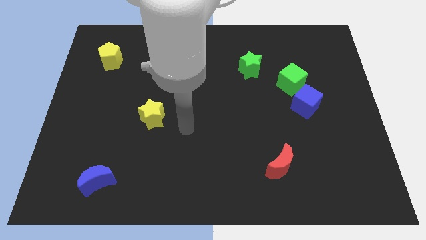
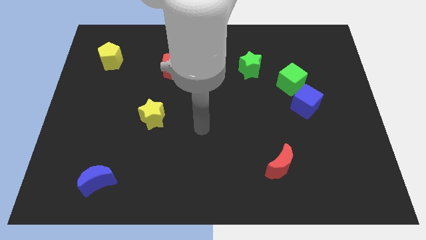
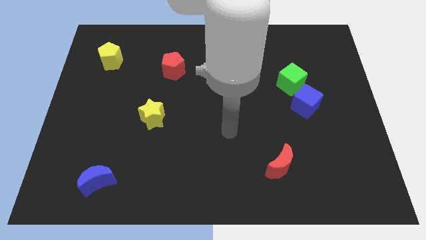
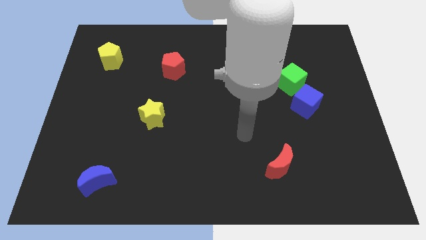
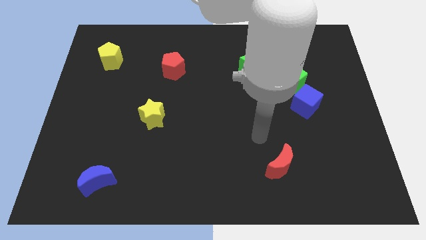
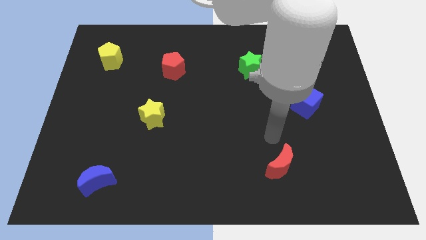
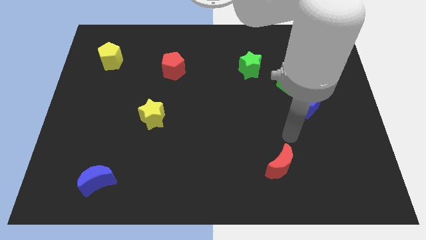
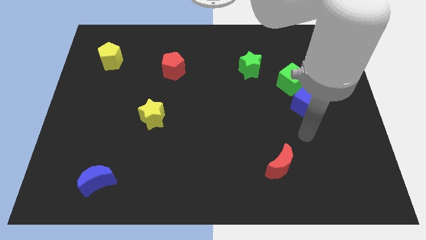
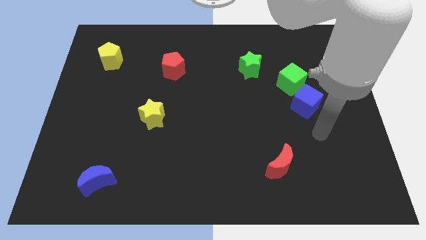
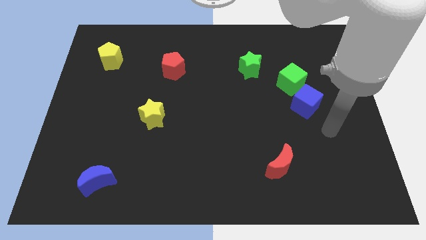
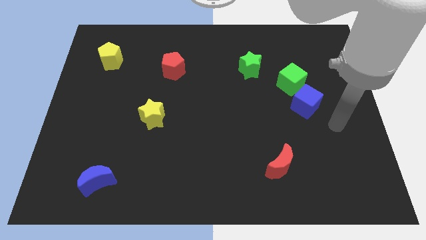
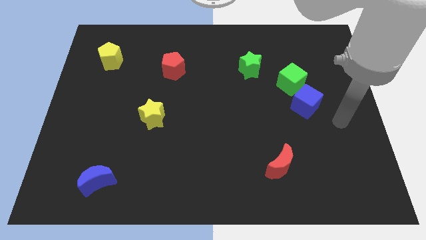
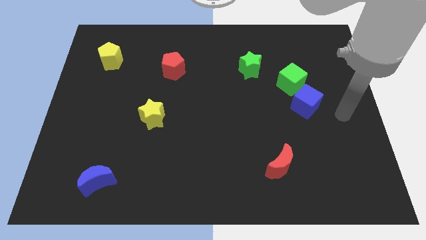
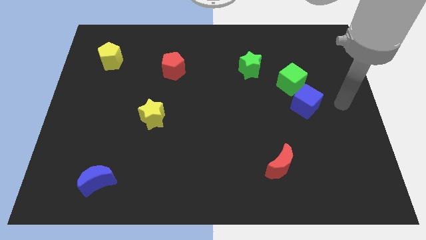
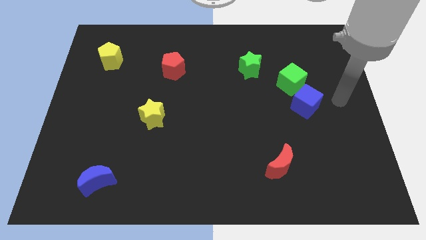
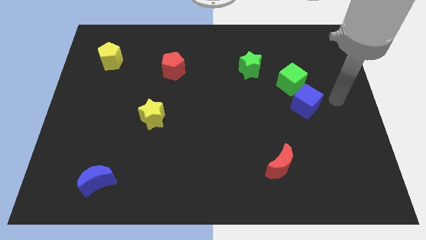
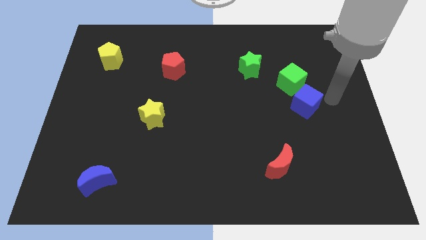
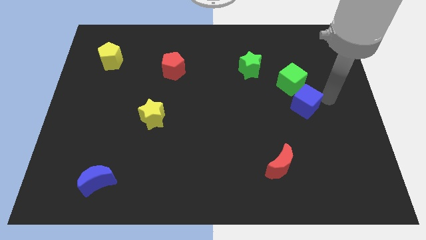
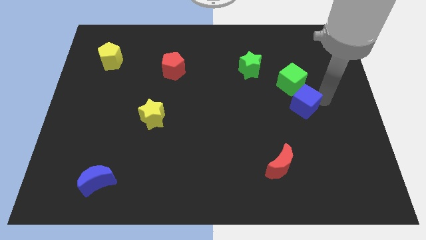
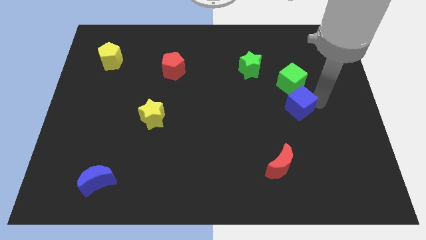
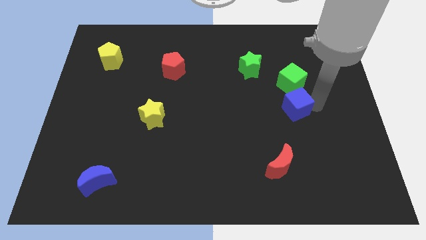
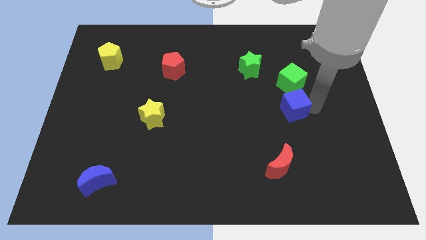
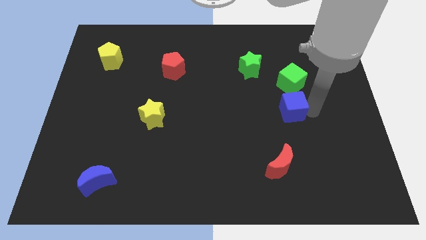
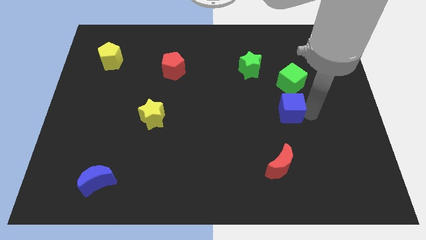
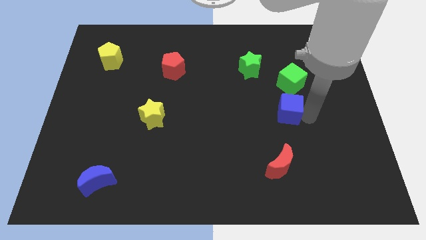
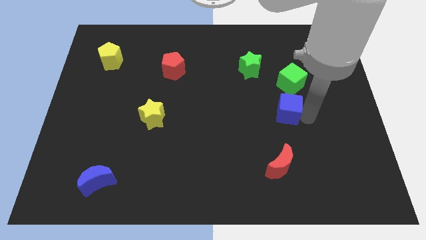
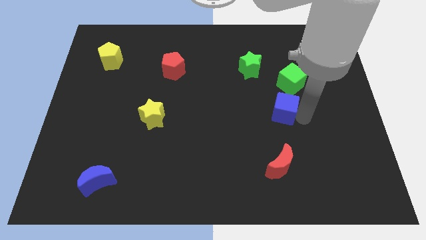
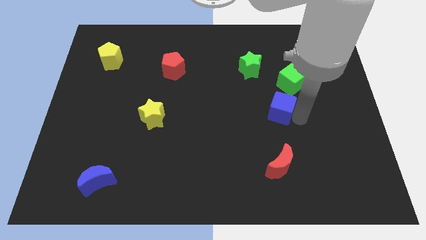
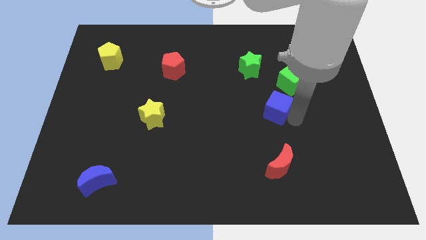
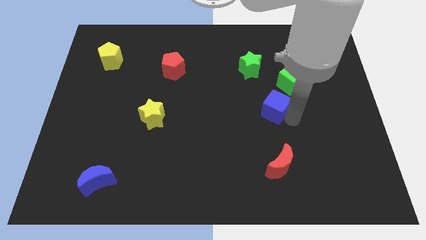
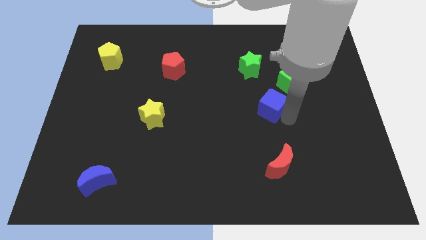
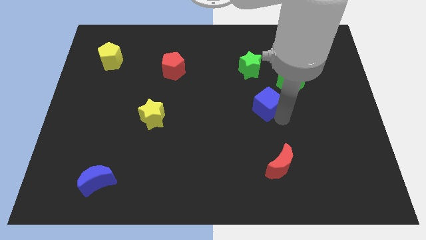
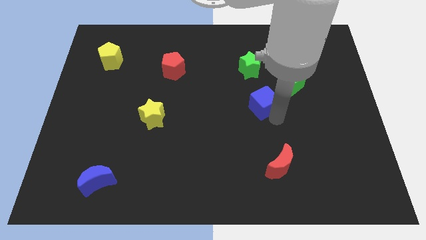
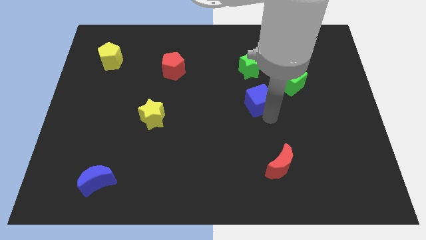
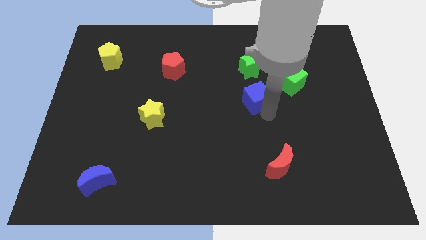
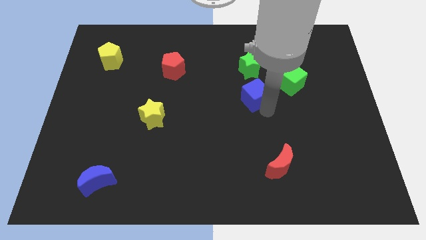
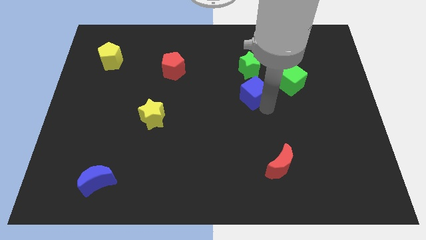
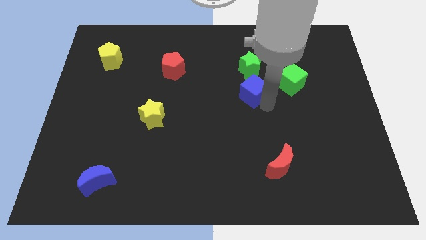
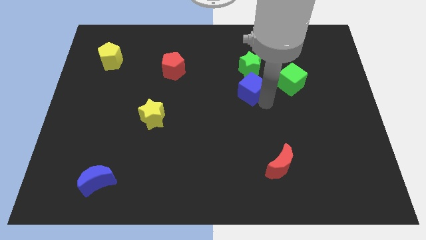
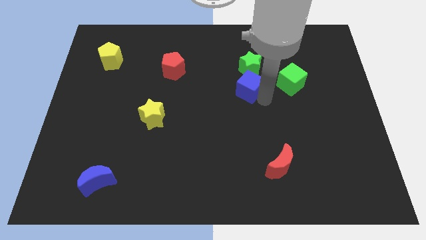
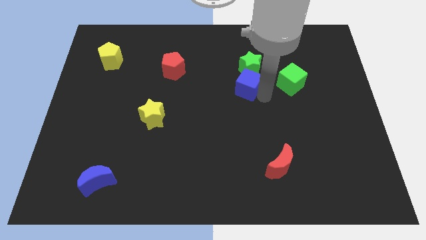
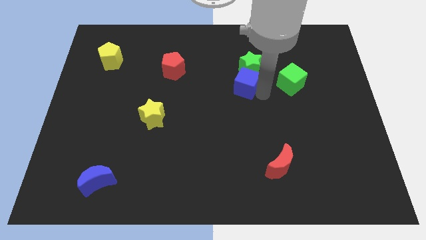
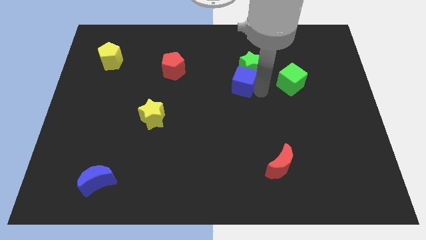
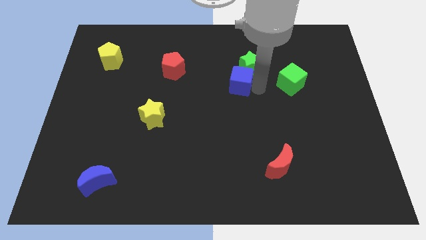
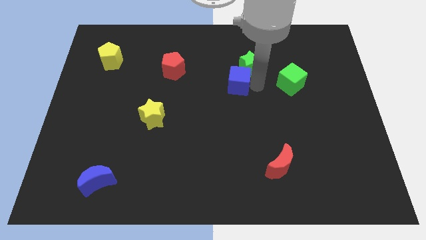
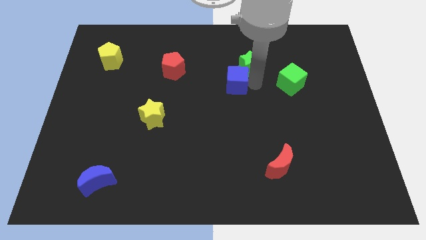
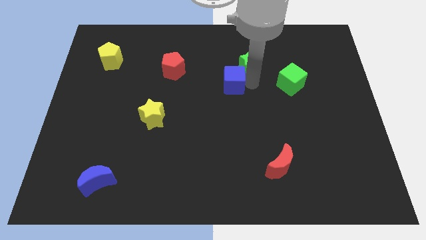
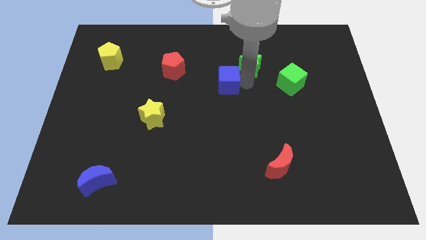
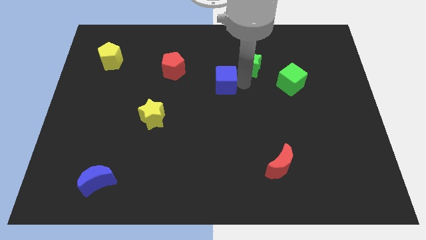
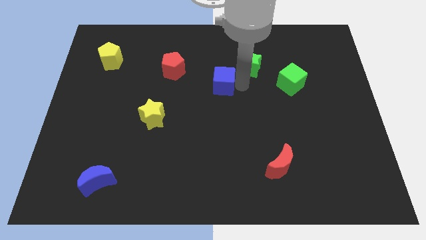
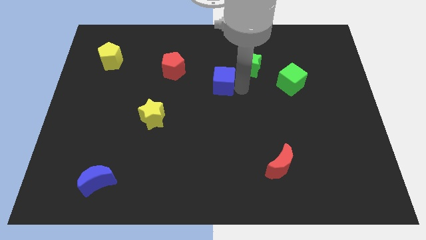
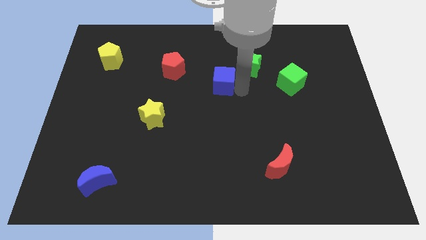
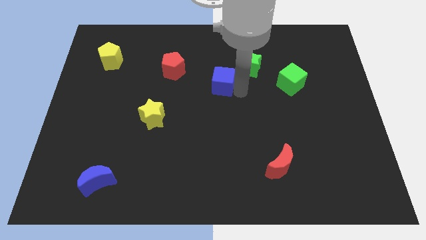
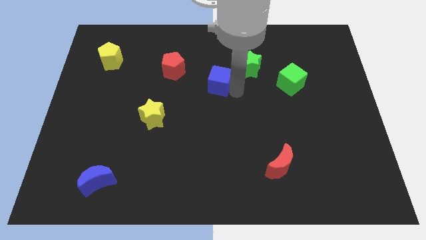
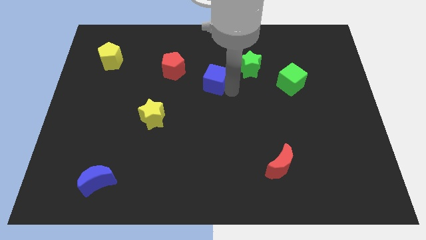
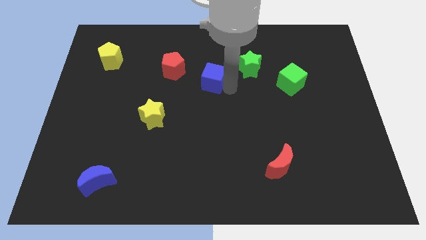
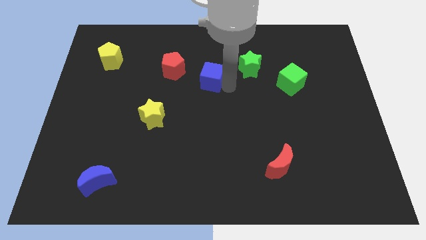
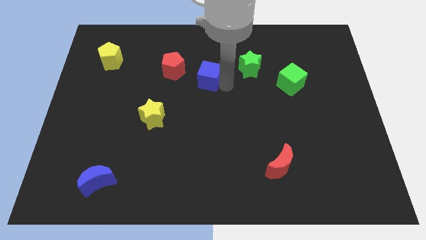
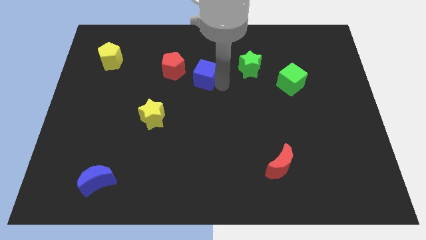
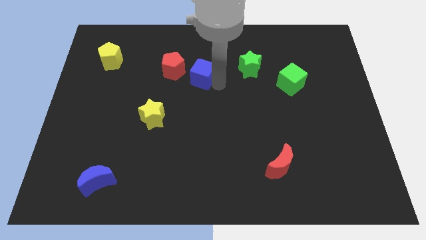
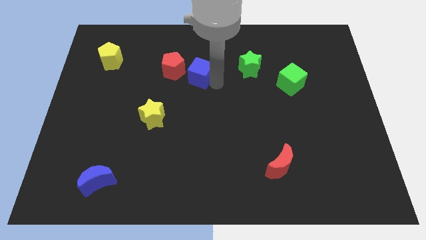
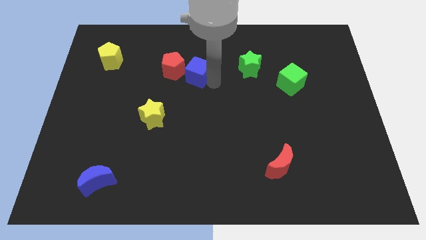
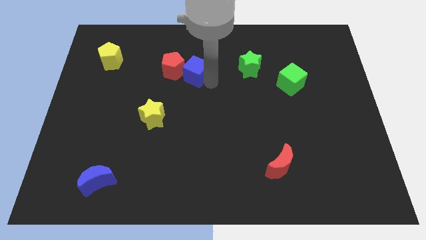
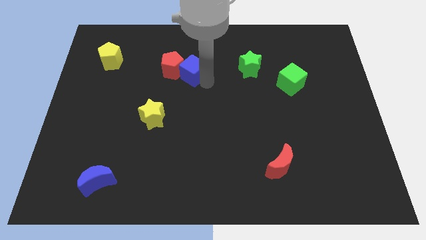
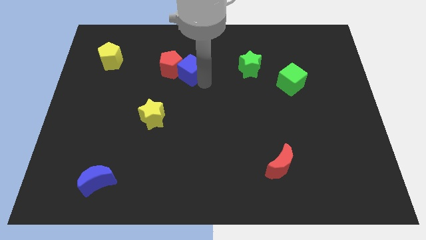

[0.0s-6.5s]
push the blue cube close to the red pentagon

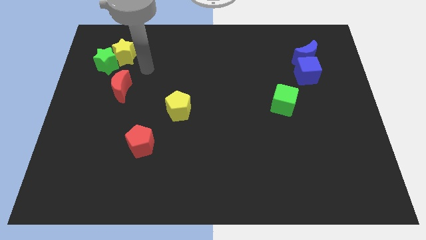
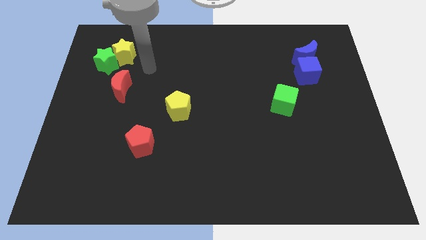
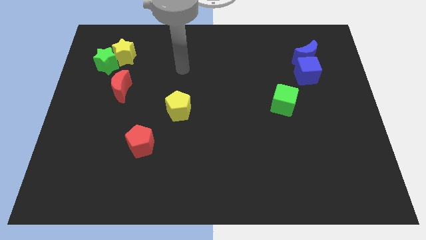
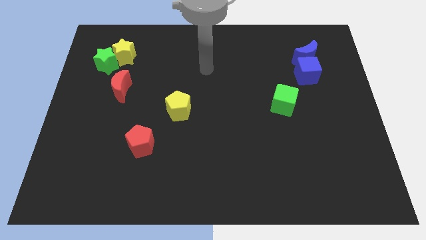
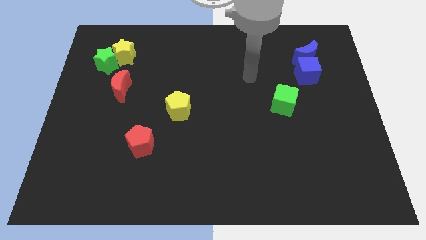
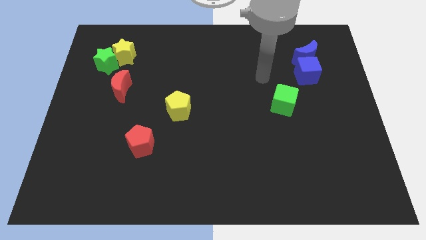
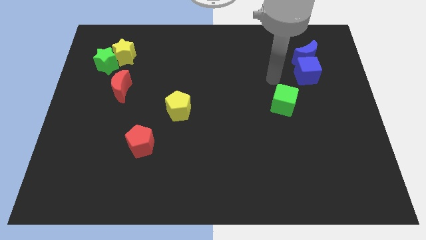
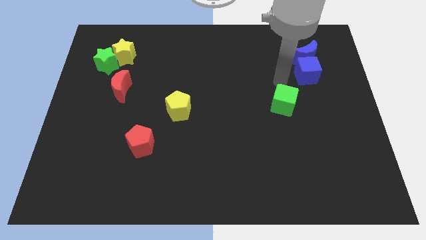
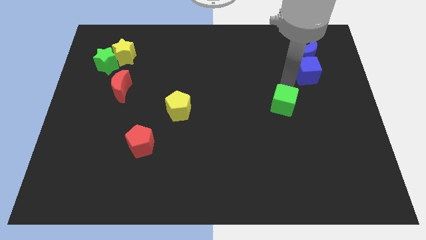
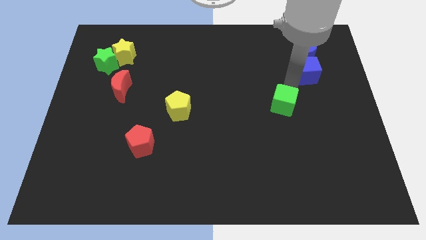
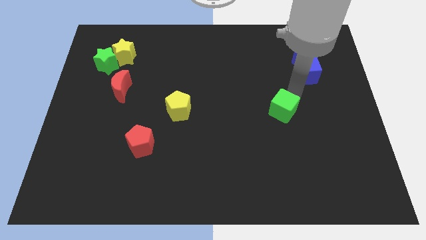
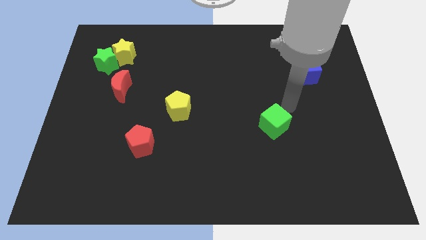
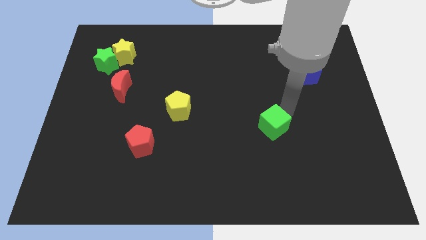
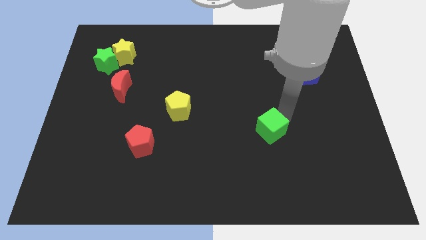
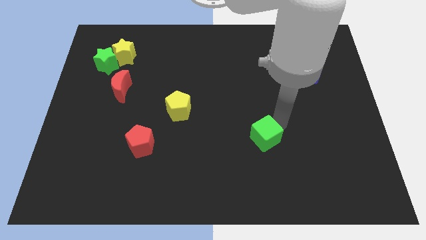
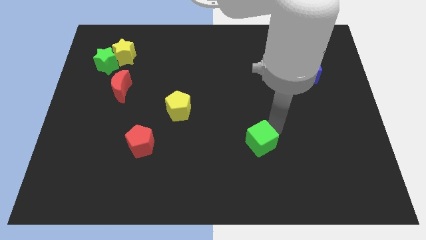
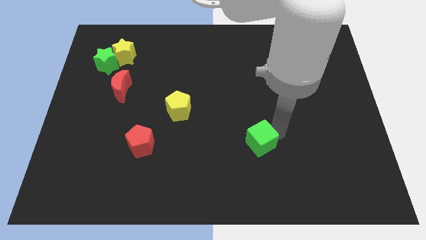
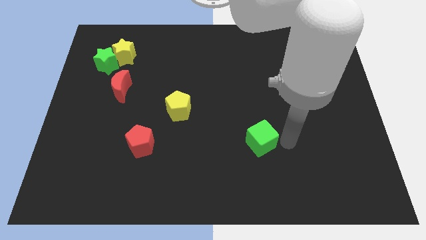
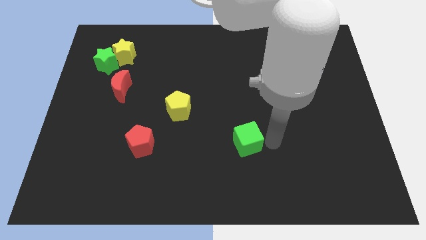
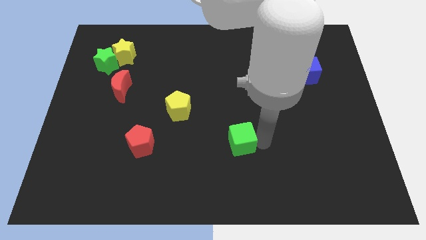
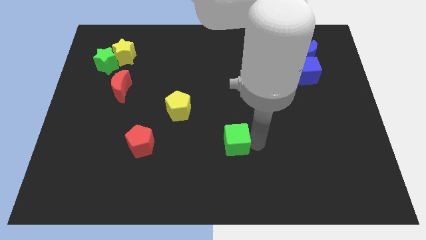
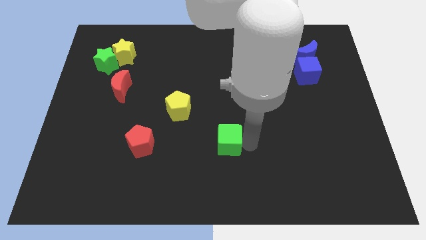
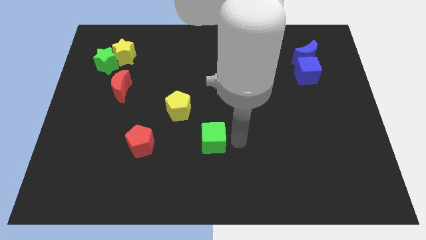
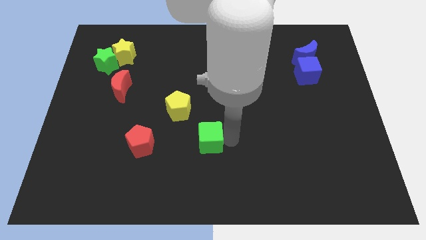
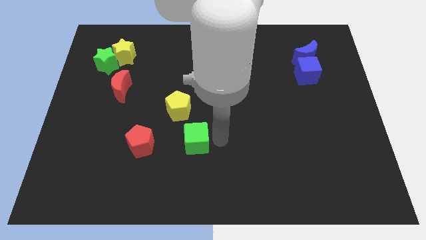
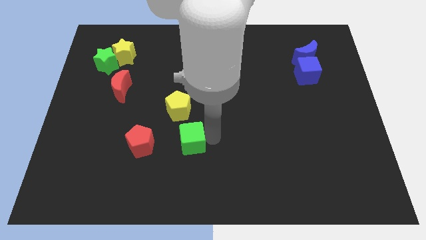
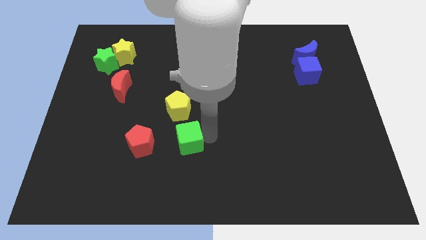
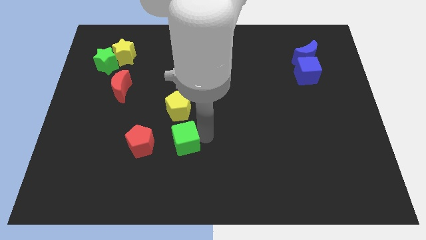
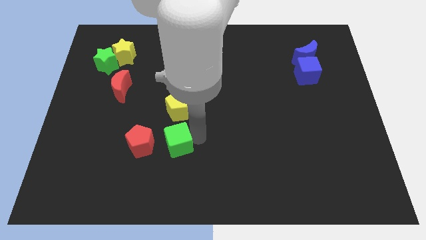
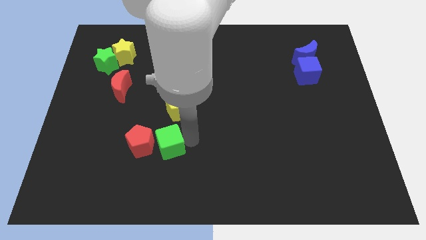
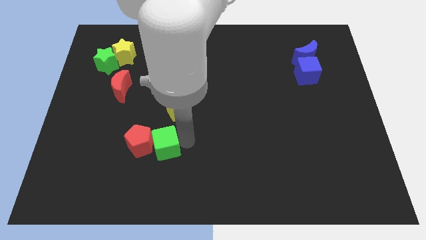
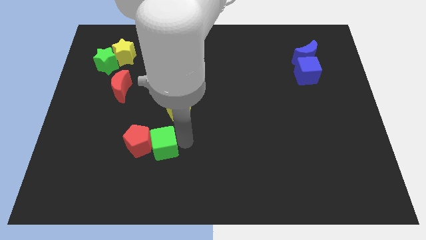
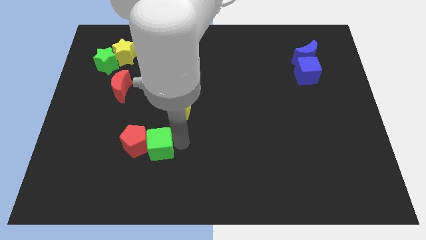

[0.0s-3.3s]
move the green cube towards the red pentagon
